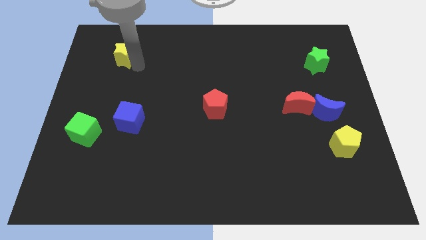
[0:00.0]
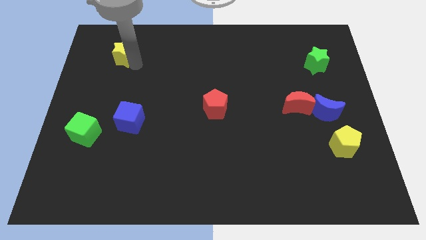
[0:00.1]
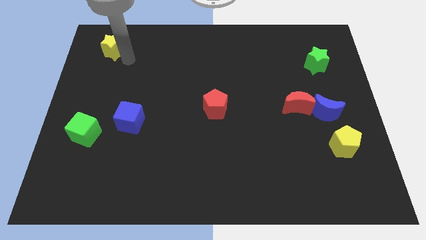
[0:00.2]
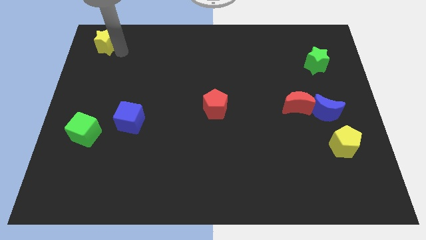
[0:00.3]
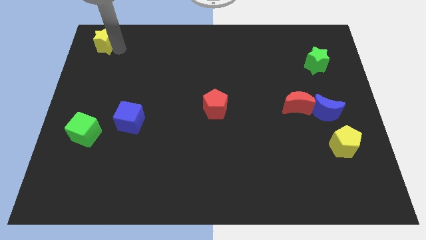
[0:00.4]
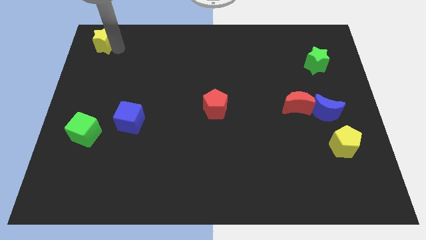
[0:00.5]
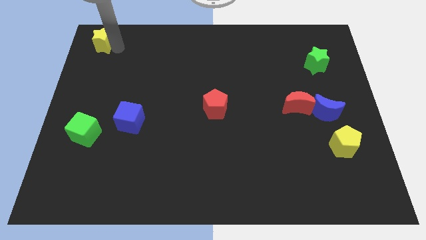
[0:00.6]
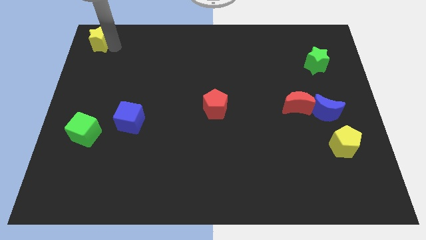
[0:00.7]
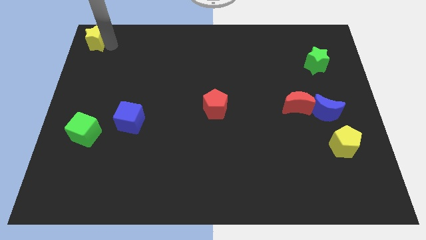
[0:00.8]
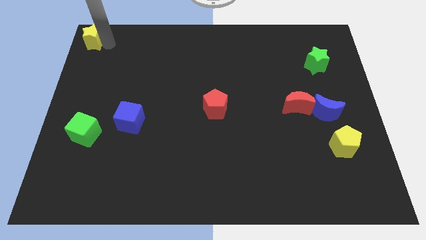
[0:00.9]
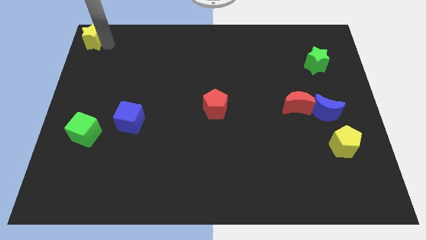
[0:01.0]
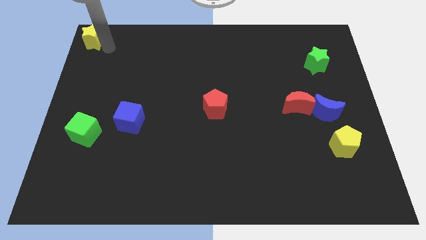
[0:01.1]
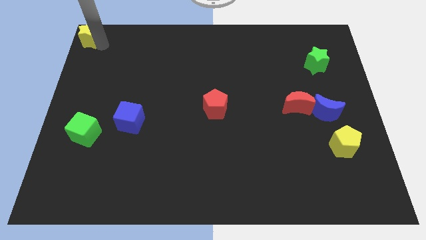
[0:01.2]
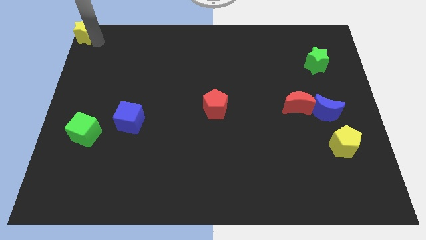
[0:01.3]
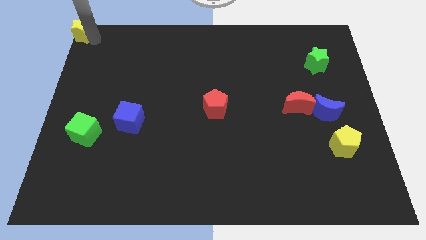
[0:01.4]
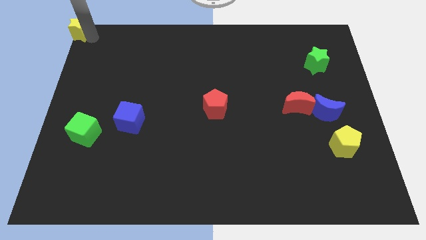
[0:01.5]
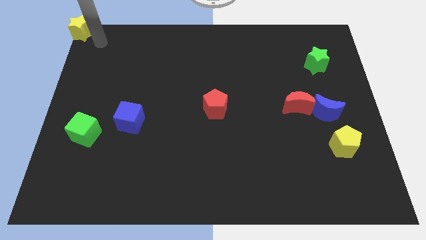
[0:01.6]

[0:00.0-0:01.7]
push the yellow star to the top left corner of the board

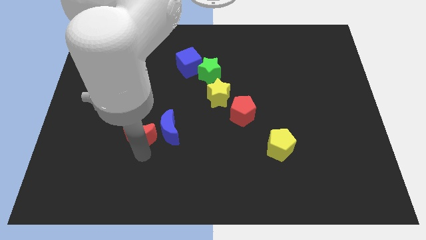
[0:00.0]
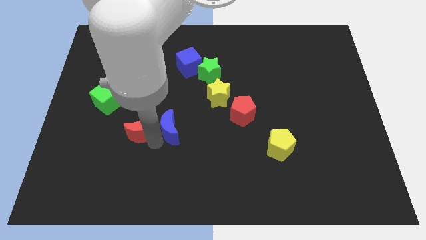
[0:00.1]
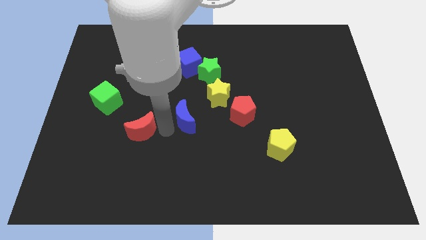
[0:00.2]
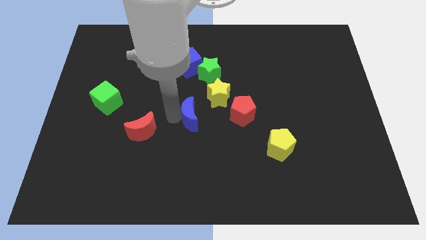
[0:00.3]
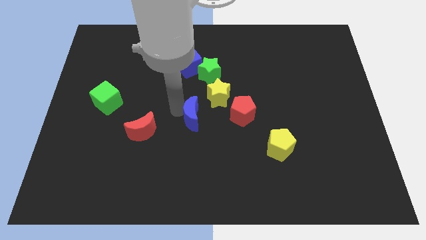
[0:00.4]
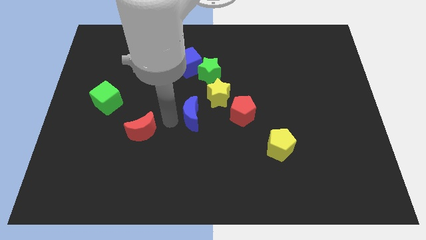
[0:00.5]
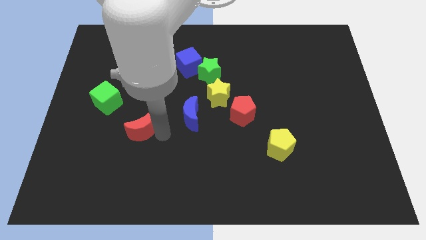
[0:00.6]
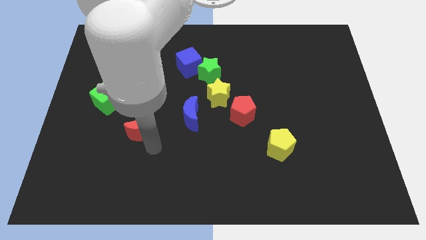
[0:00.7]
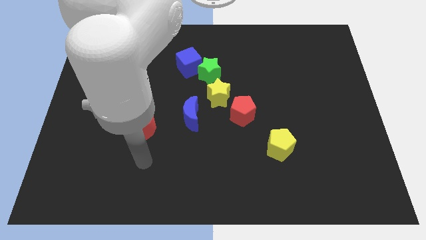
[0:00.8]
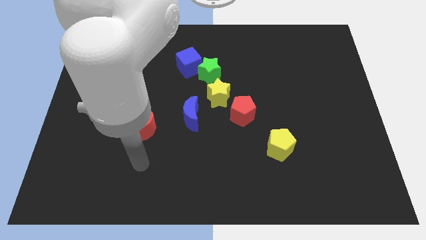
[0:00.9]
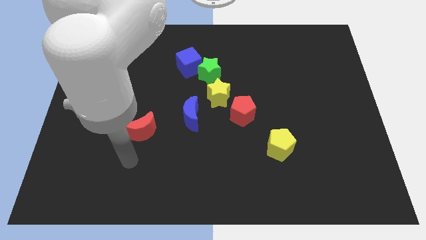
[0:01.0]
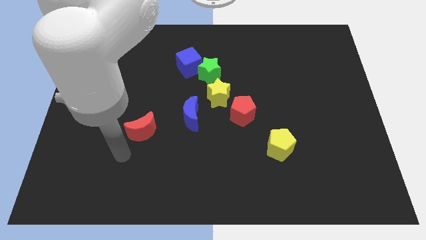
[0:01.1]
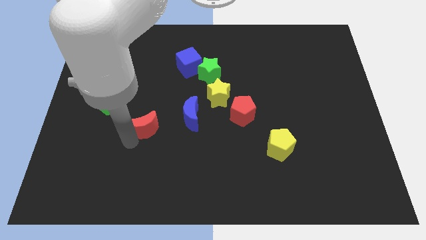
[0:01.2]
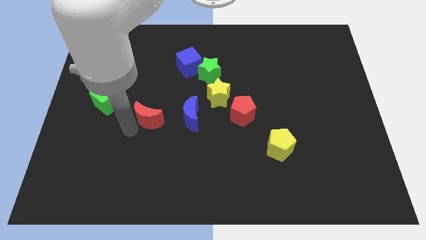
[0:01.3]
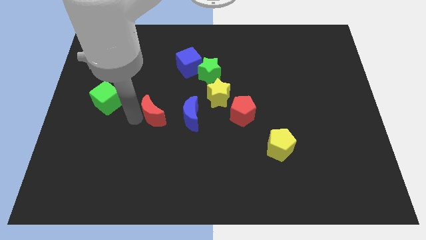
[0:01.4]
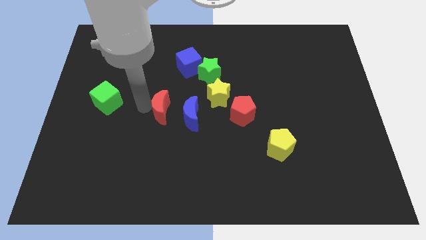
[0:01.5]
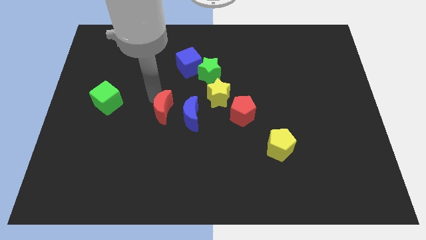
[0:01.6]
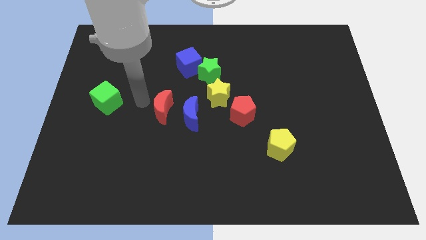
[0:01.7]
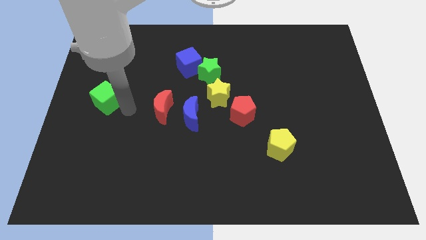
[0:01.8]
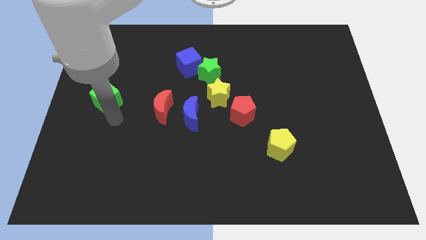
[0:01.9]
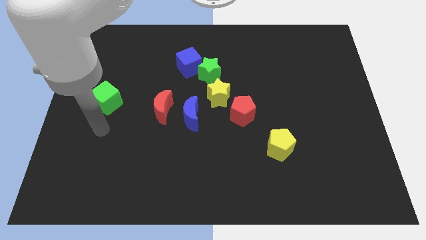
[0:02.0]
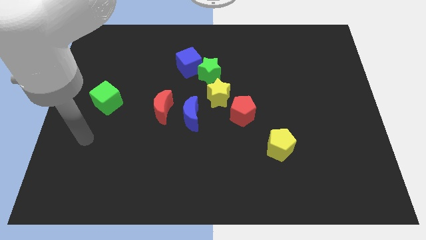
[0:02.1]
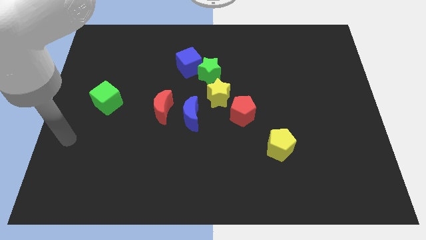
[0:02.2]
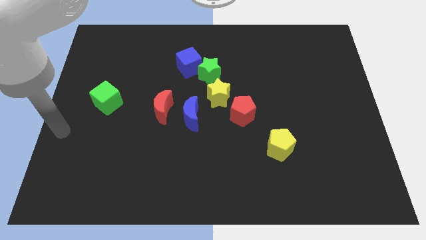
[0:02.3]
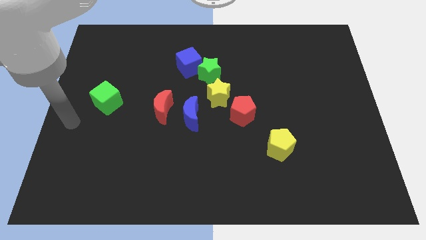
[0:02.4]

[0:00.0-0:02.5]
push the blue and red moon to the right side center

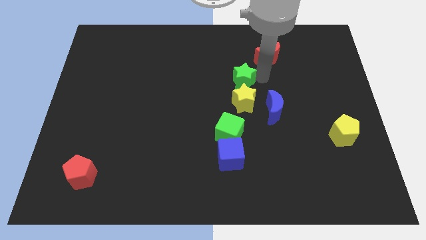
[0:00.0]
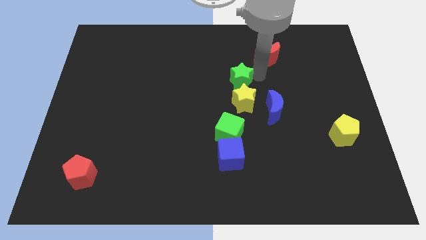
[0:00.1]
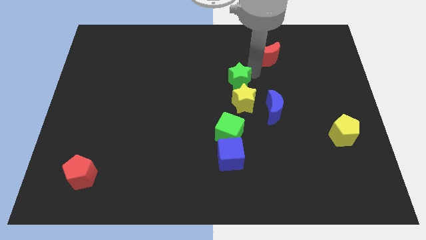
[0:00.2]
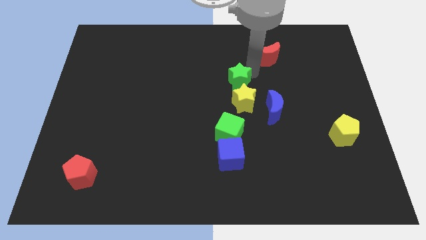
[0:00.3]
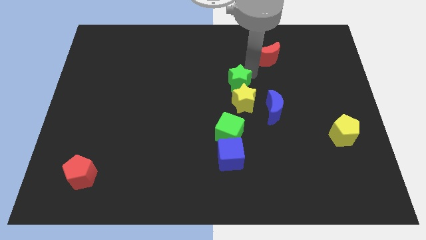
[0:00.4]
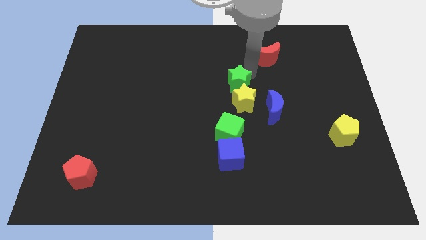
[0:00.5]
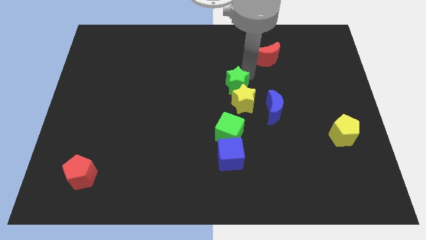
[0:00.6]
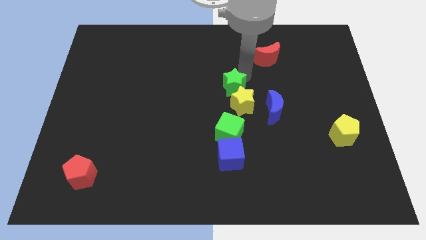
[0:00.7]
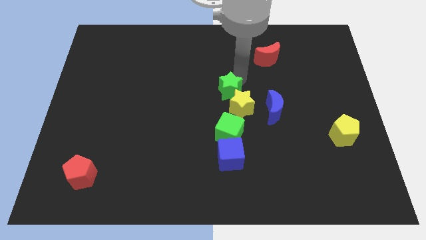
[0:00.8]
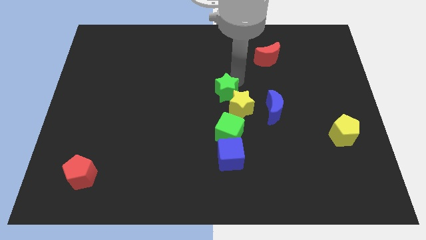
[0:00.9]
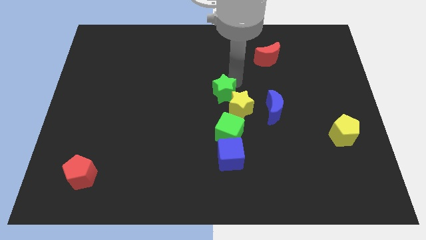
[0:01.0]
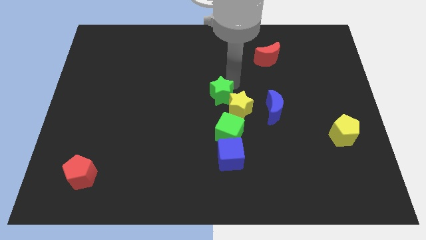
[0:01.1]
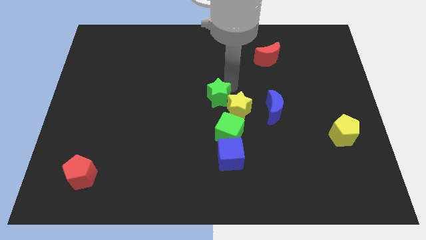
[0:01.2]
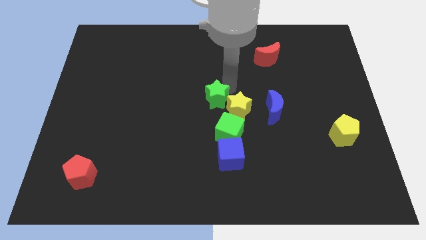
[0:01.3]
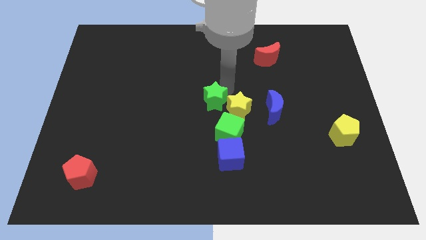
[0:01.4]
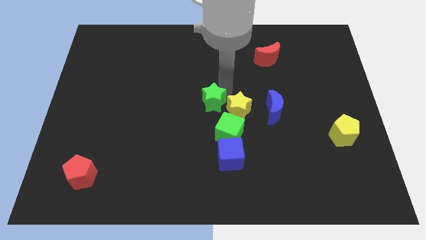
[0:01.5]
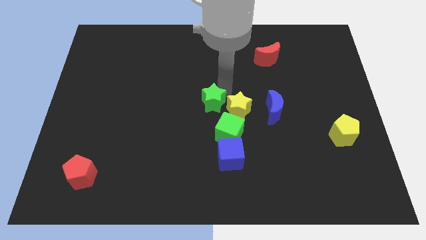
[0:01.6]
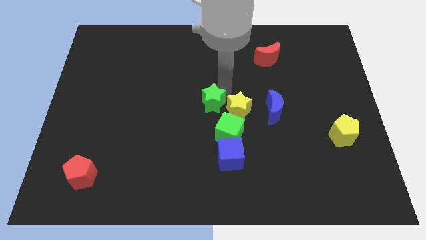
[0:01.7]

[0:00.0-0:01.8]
move the green star towards the left yellow star

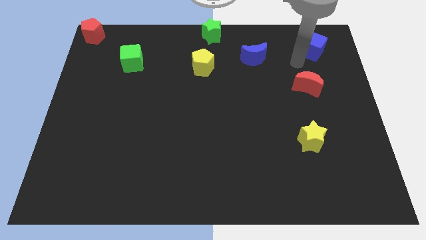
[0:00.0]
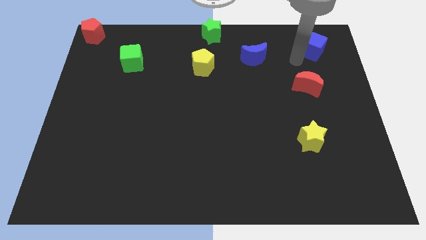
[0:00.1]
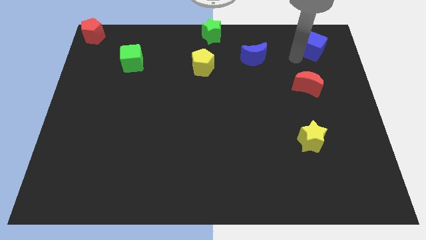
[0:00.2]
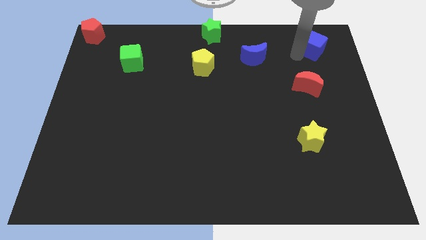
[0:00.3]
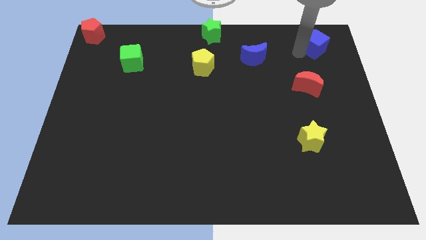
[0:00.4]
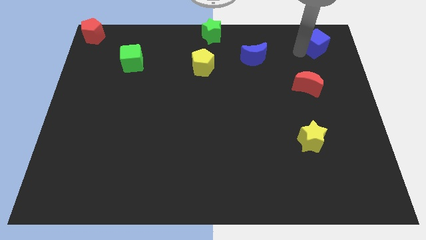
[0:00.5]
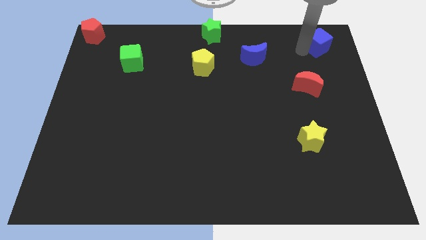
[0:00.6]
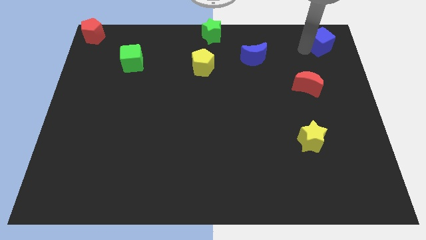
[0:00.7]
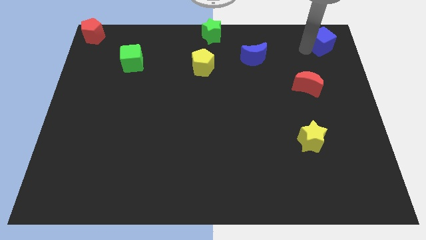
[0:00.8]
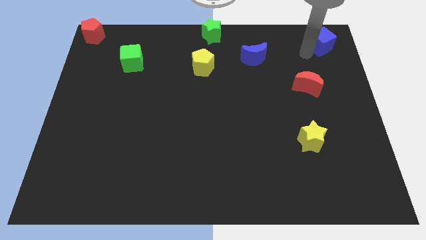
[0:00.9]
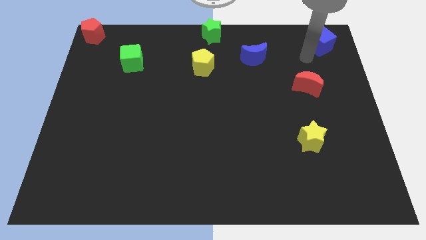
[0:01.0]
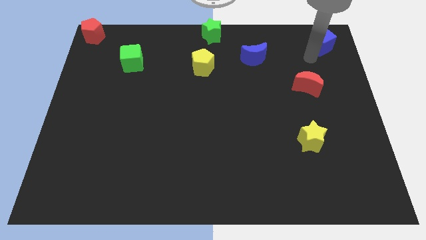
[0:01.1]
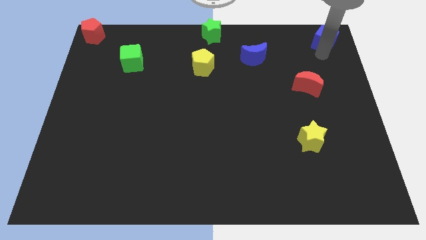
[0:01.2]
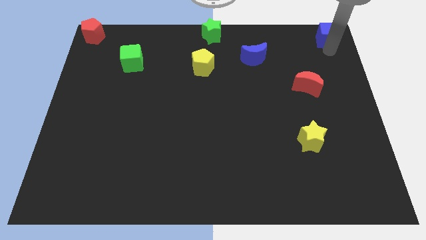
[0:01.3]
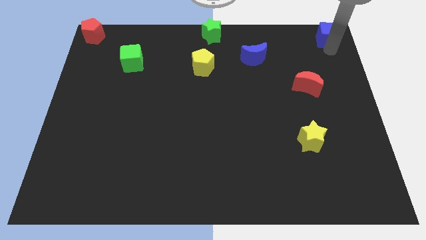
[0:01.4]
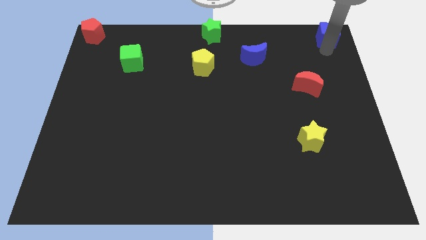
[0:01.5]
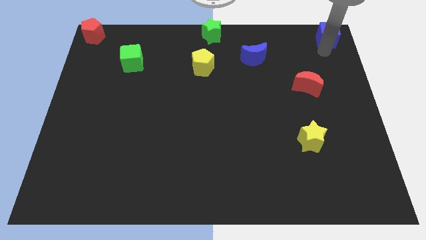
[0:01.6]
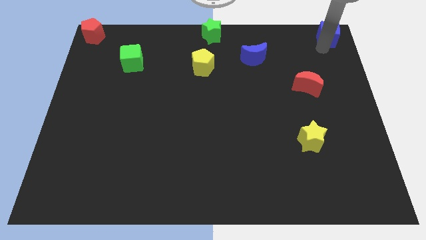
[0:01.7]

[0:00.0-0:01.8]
slide the blue cube to the top right of the board

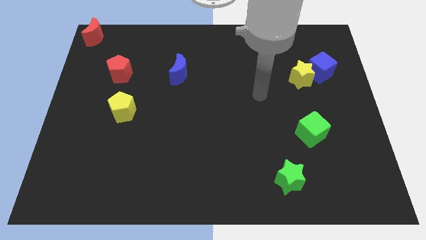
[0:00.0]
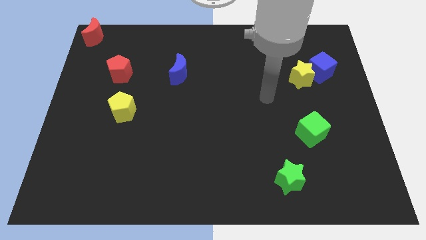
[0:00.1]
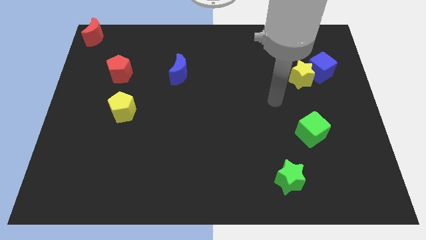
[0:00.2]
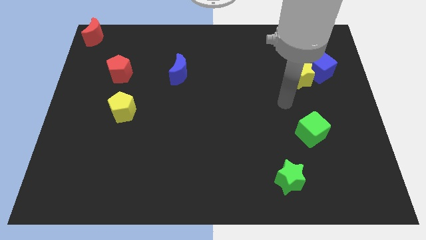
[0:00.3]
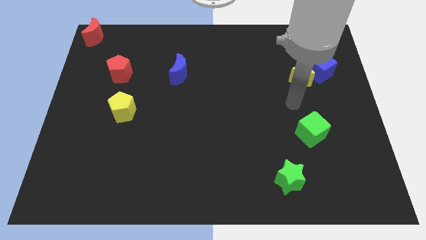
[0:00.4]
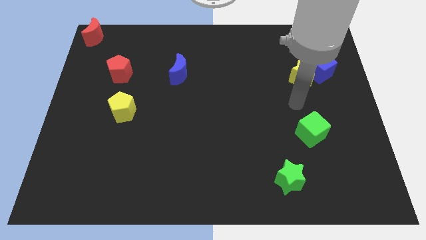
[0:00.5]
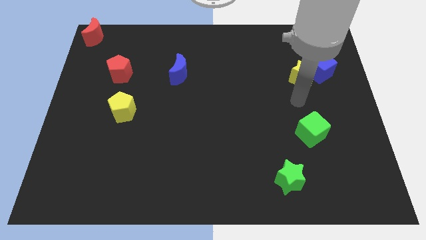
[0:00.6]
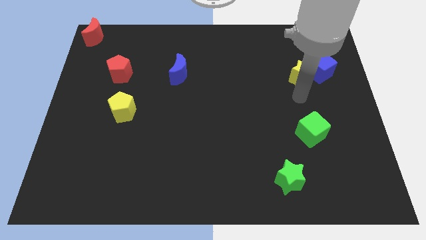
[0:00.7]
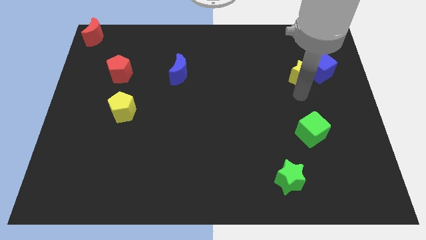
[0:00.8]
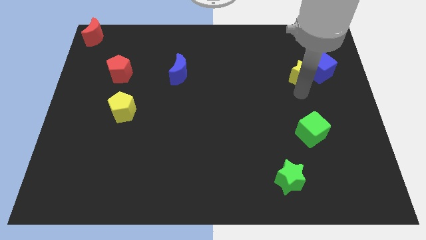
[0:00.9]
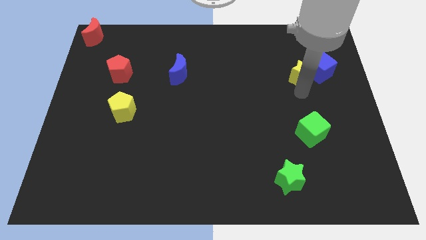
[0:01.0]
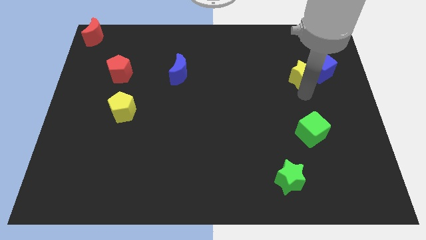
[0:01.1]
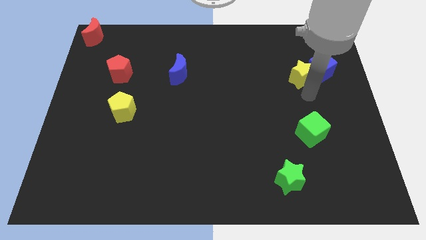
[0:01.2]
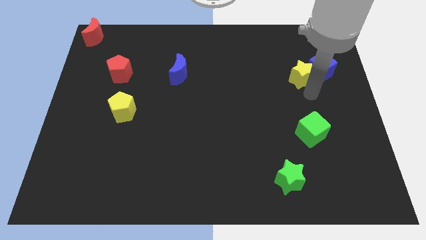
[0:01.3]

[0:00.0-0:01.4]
move your hand to the bottom of the yellow star
